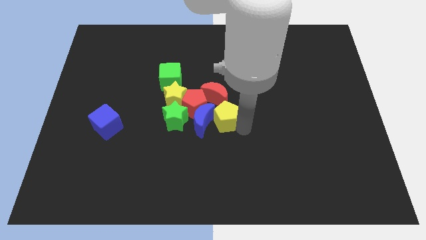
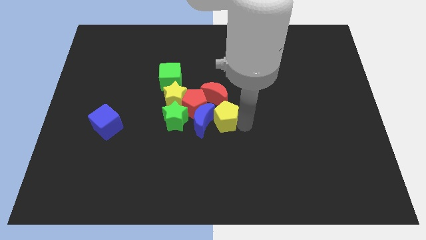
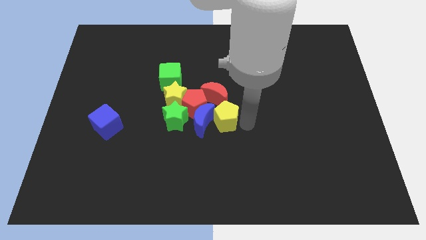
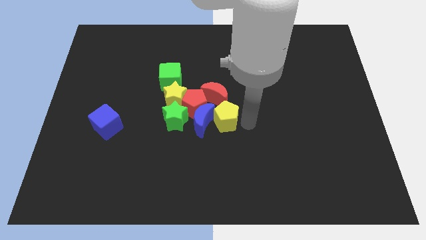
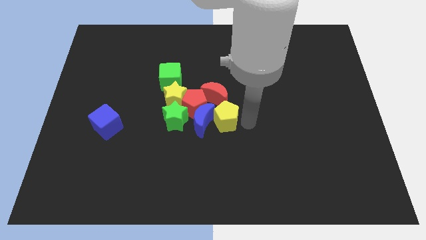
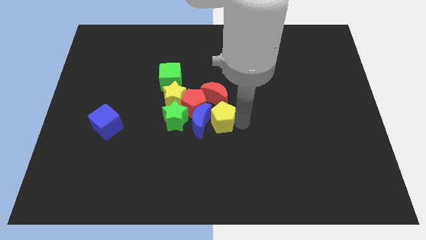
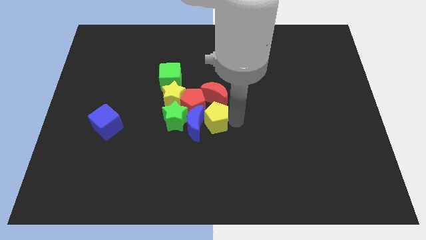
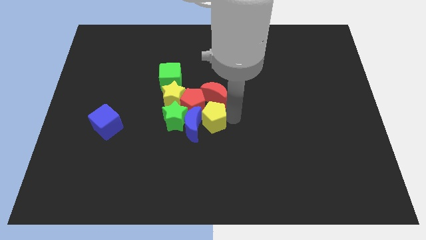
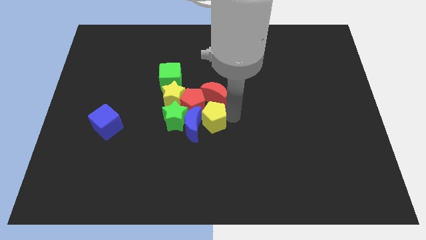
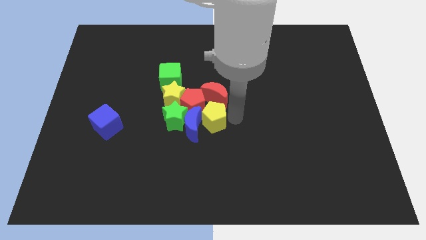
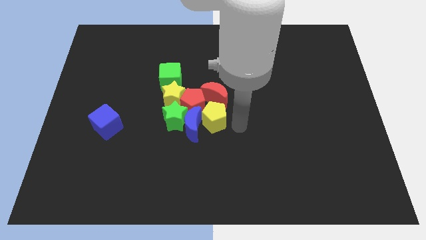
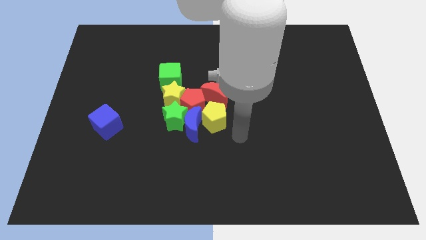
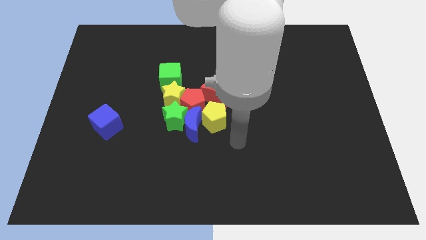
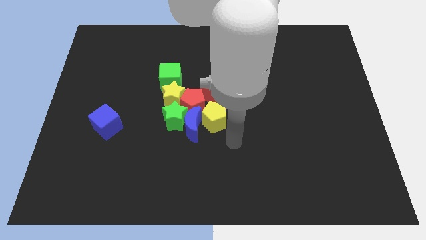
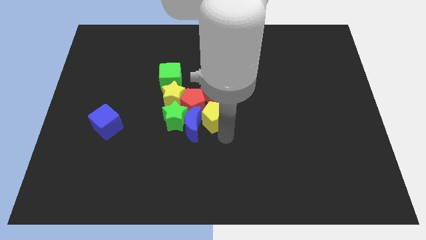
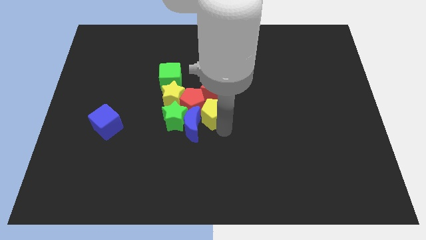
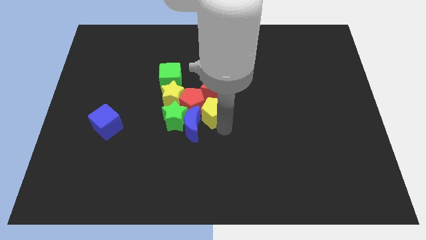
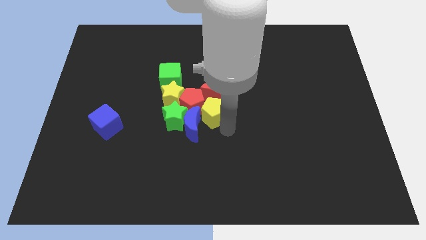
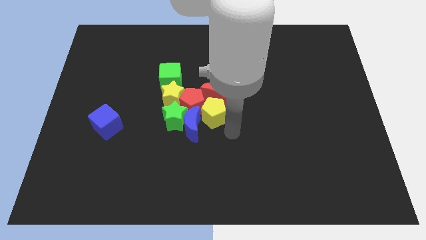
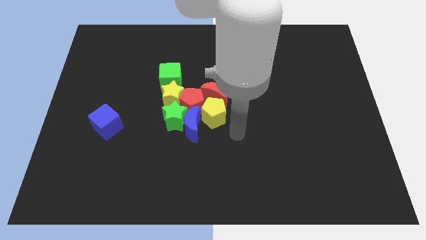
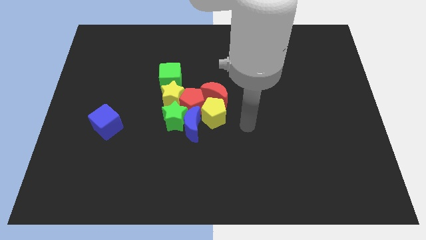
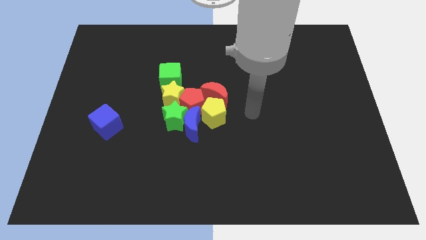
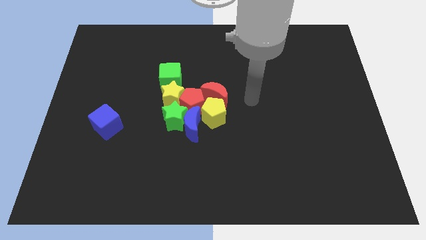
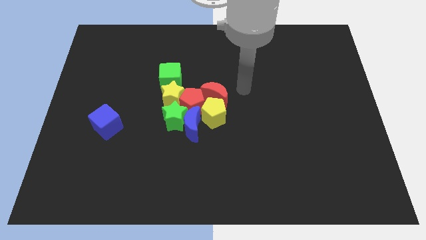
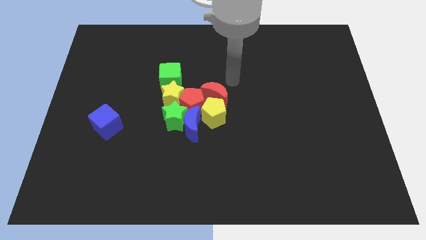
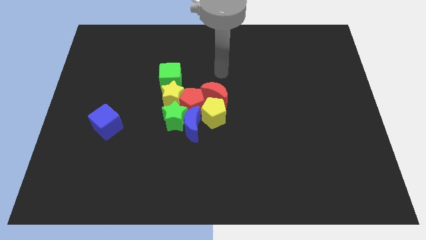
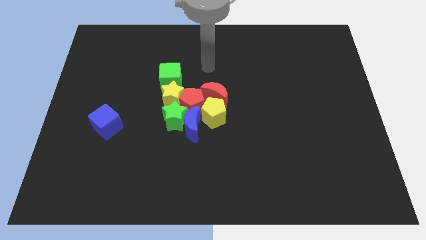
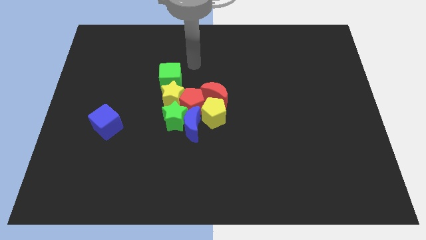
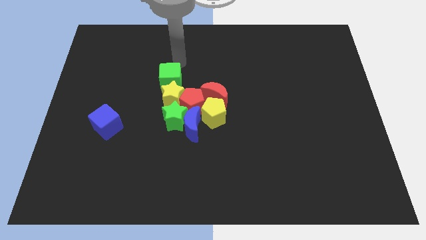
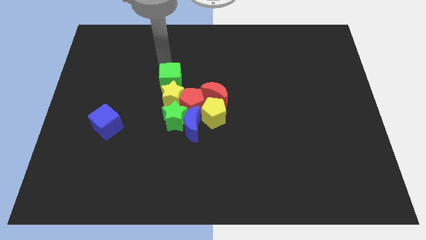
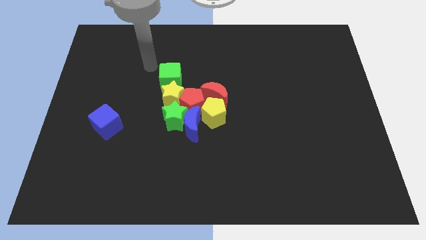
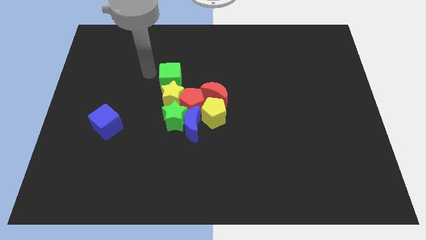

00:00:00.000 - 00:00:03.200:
adjust the group of blocks close to each other

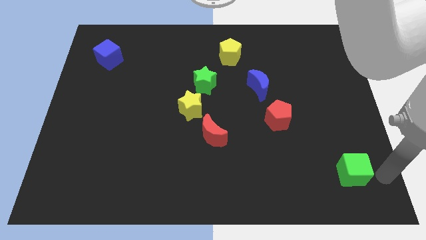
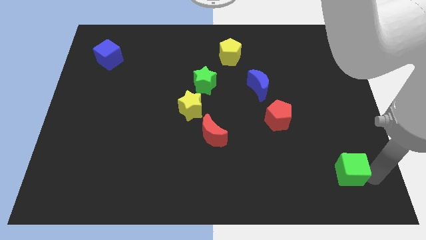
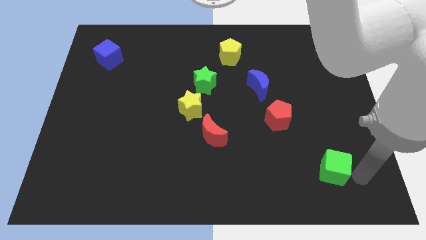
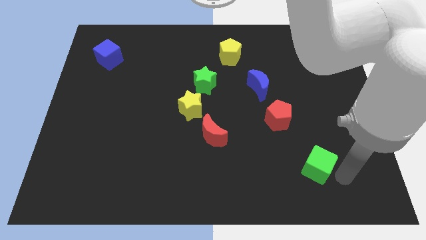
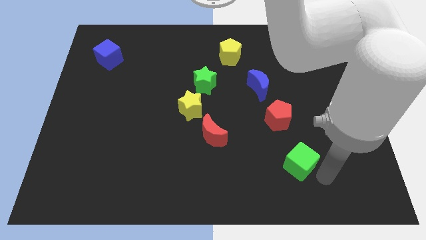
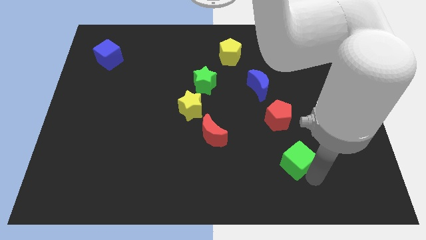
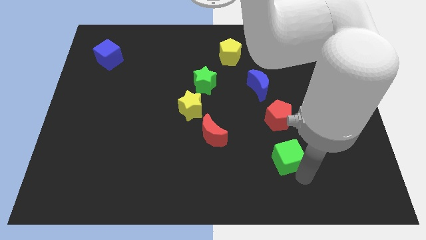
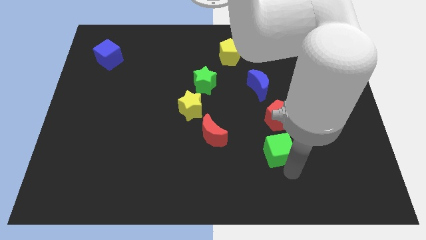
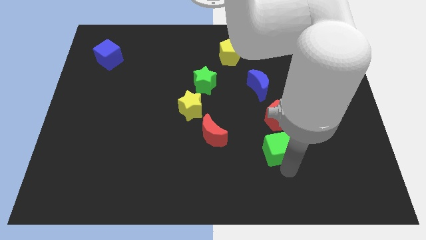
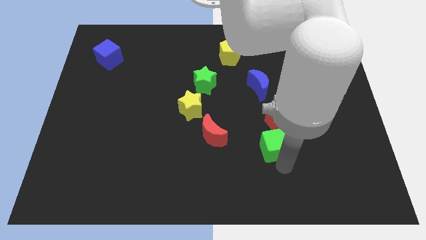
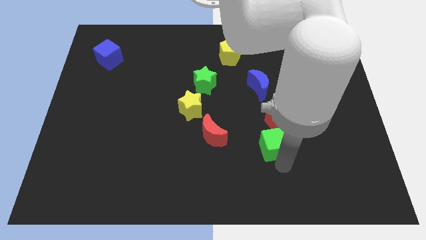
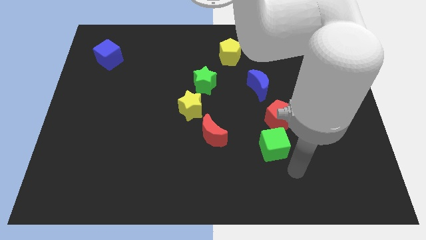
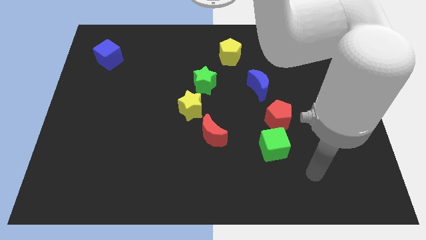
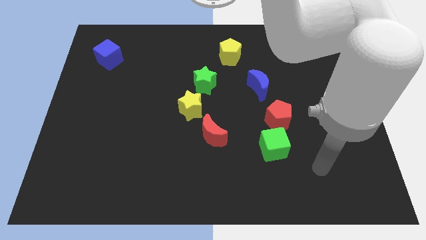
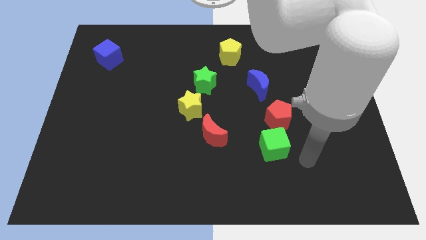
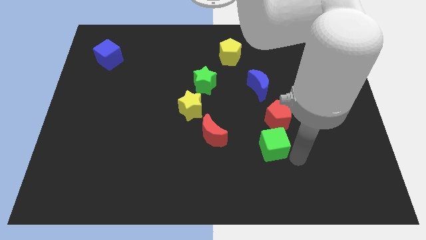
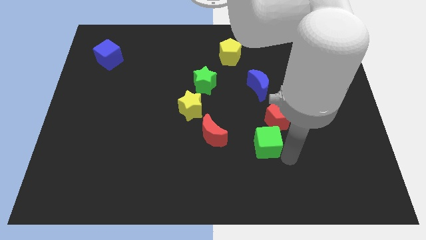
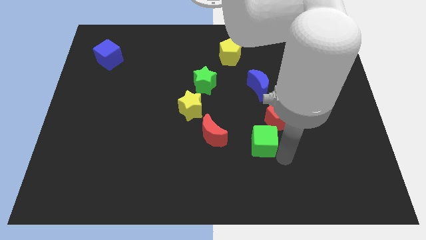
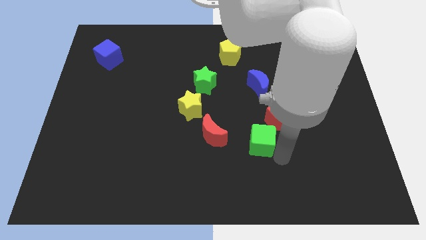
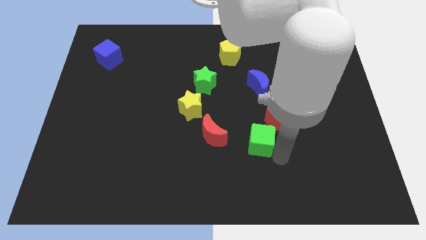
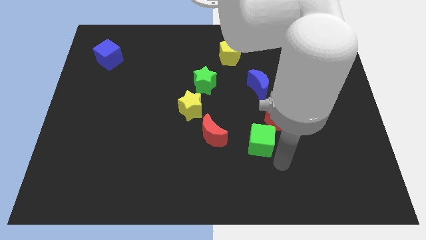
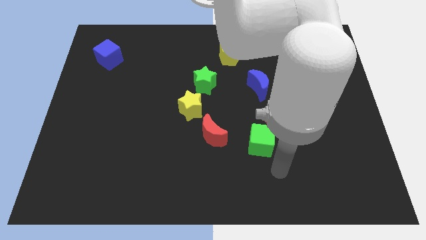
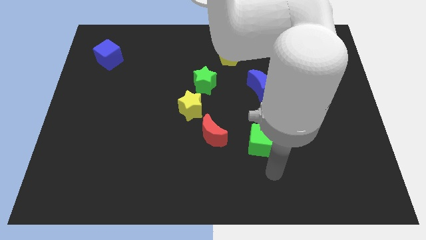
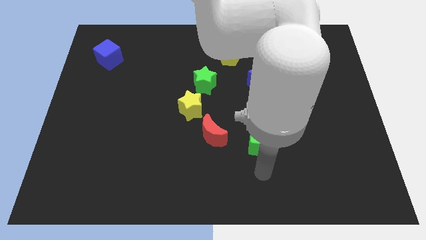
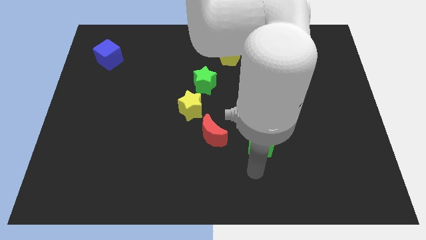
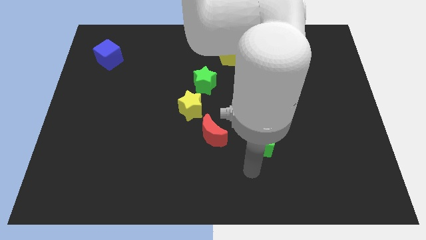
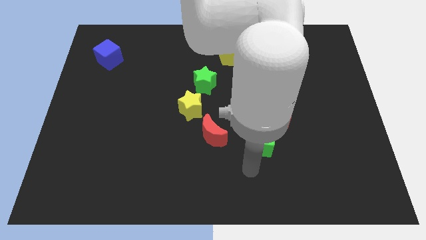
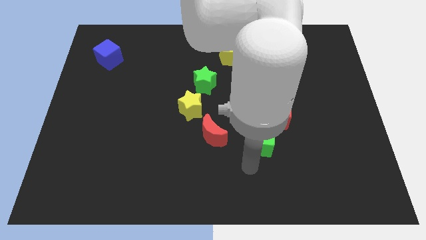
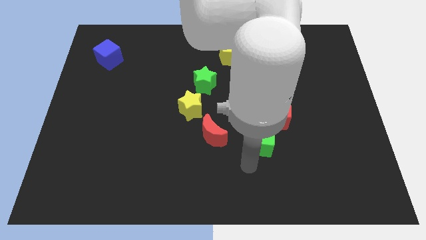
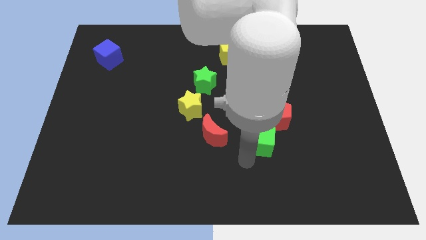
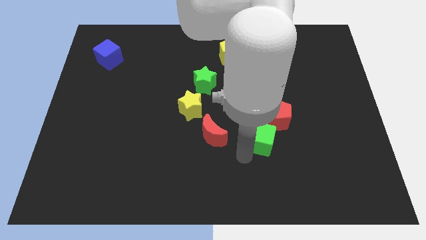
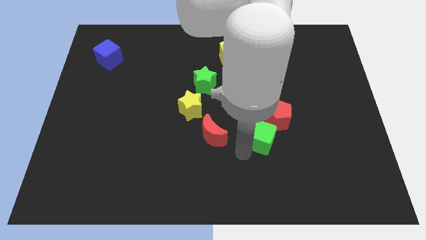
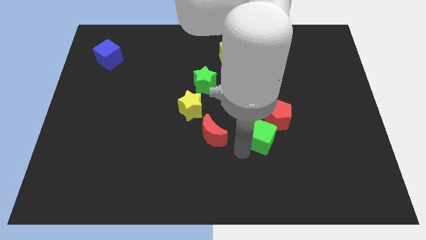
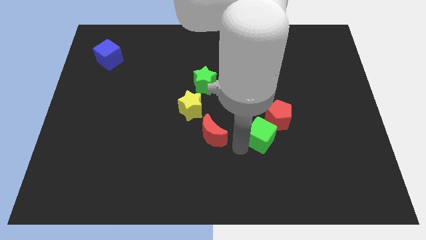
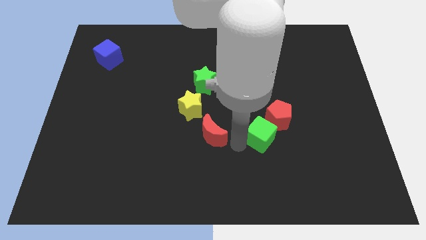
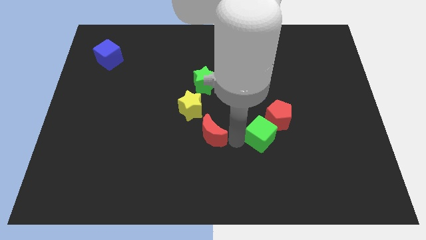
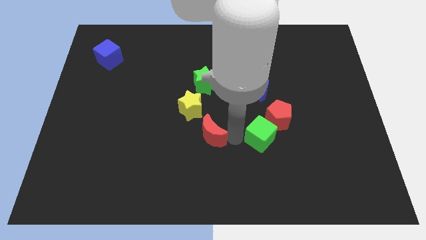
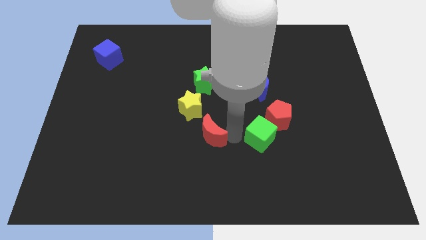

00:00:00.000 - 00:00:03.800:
place the green cube near to the red pentagon

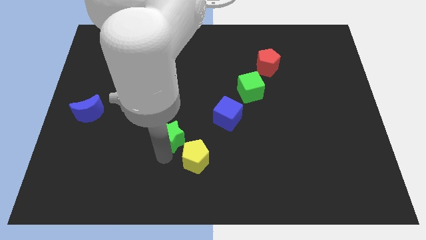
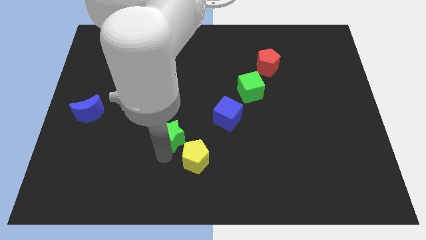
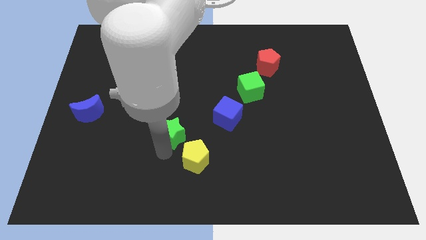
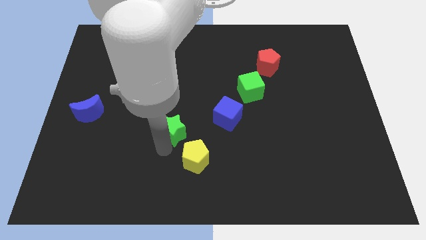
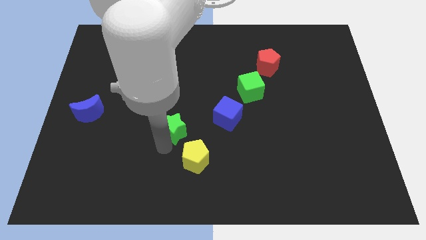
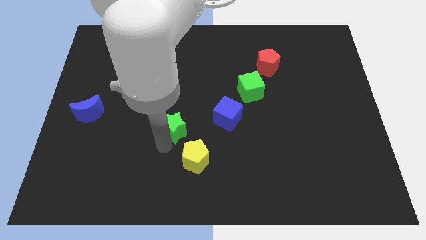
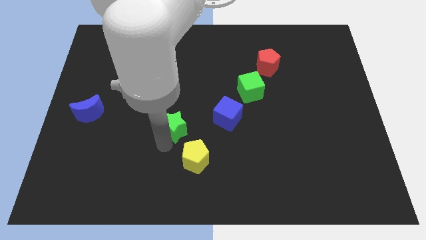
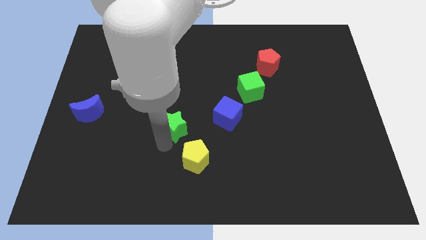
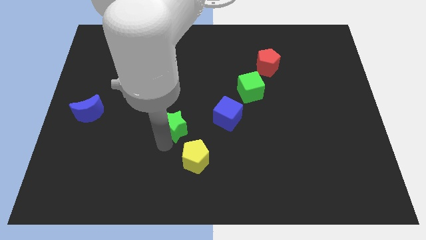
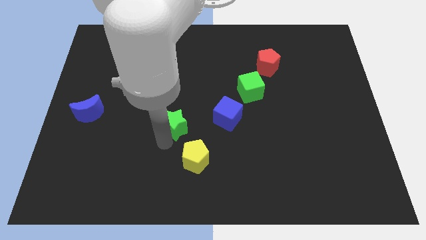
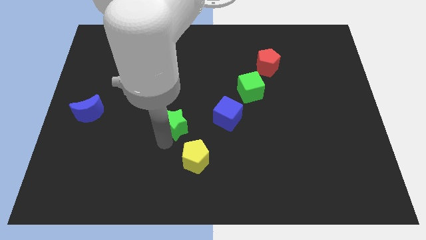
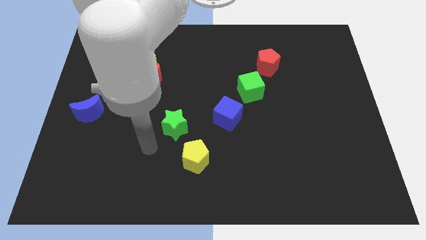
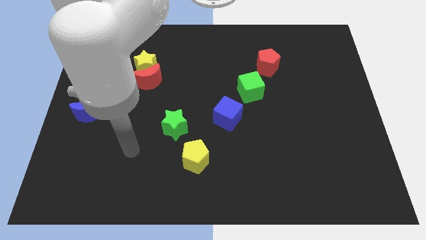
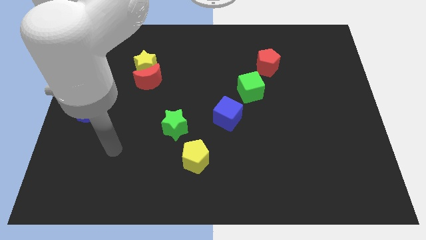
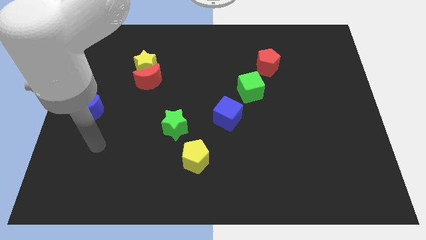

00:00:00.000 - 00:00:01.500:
push the green star to the left side of the blue cube

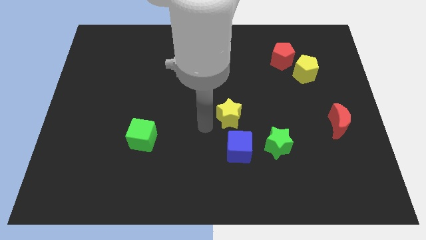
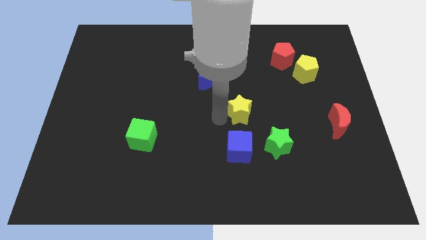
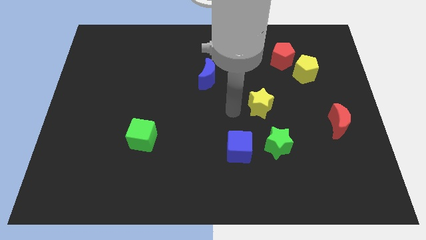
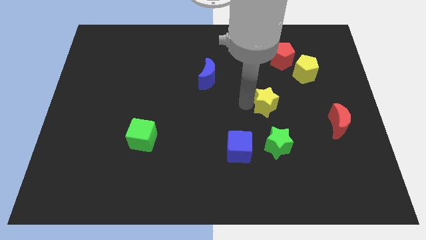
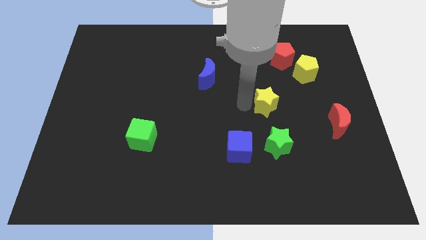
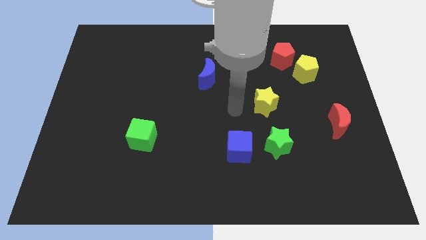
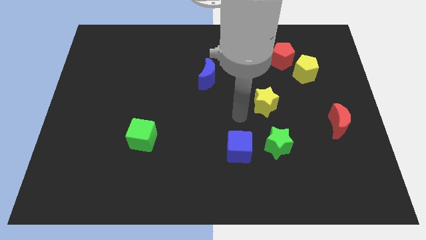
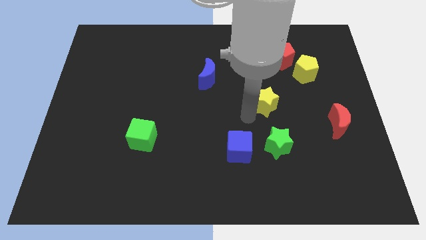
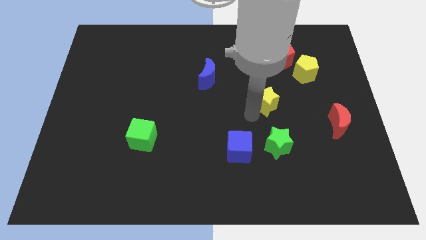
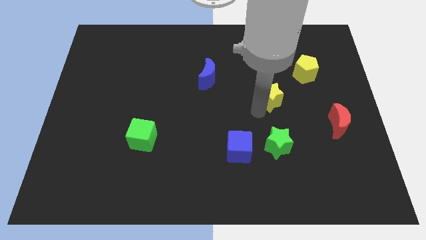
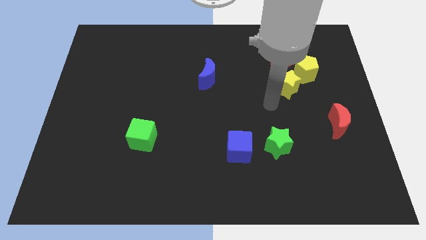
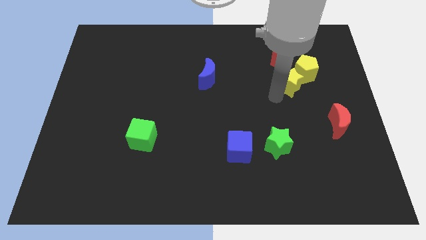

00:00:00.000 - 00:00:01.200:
push the yellow star diagonally left of the yellow pentagon
